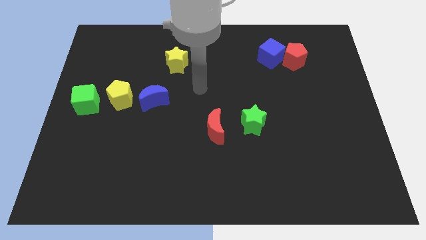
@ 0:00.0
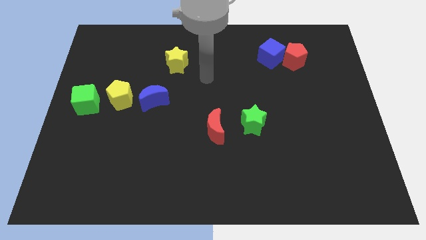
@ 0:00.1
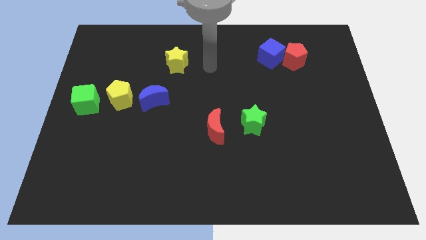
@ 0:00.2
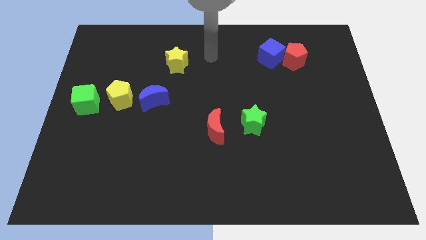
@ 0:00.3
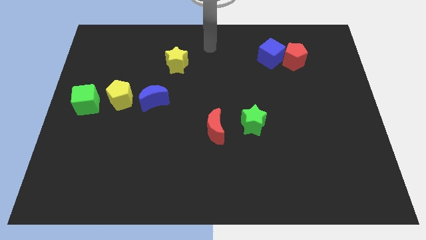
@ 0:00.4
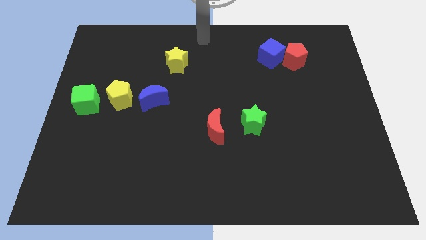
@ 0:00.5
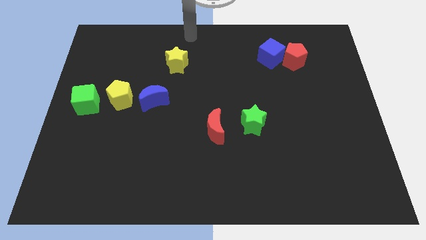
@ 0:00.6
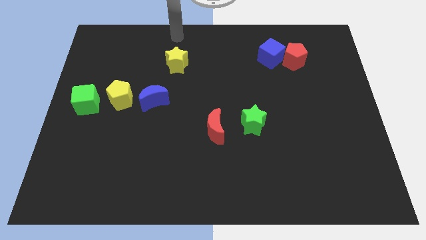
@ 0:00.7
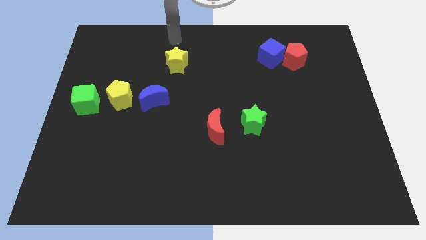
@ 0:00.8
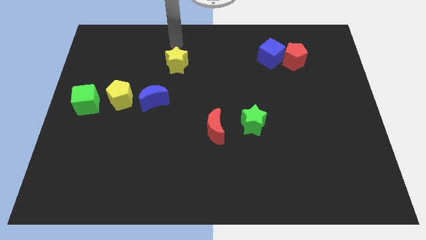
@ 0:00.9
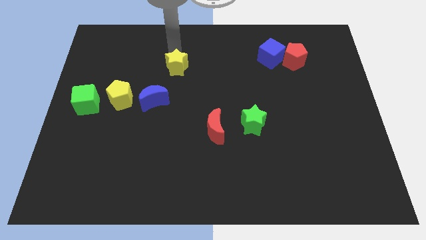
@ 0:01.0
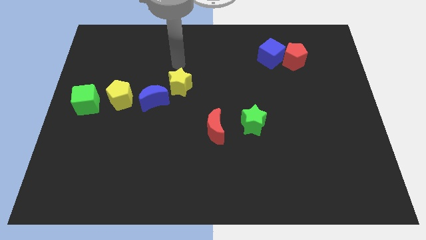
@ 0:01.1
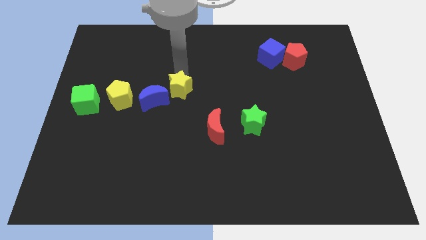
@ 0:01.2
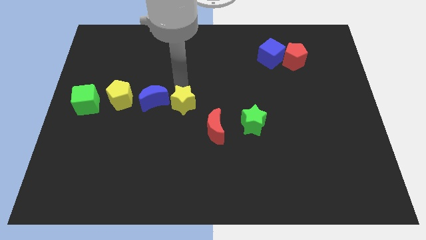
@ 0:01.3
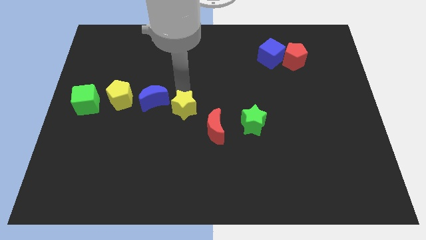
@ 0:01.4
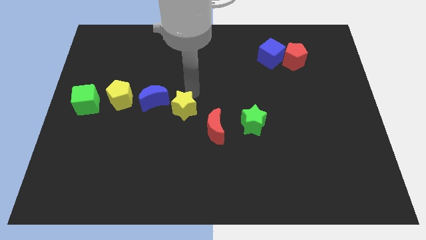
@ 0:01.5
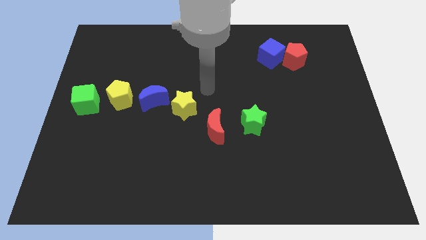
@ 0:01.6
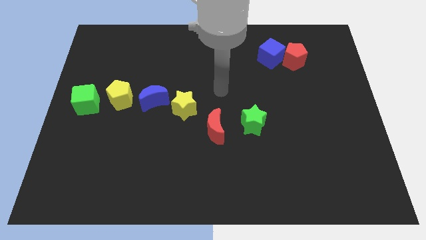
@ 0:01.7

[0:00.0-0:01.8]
place the yellow star in between the red and blue moons

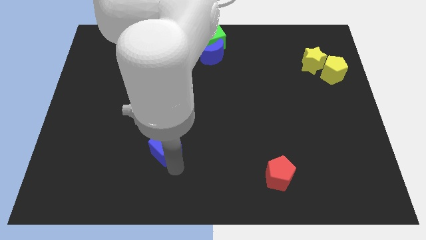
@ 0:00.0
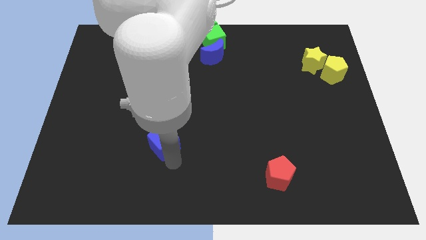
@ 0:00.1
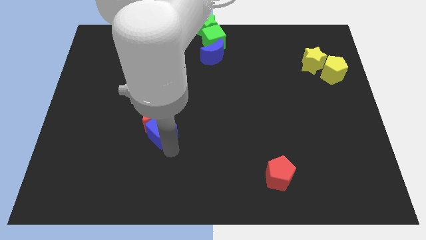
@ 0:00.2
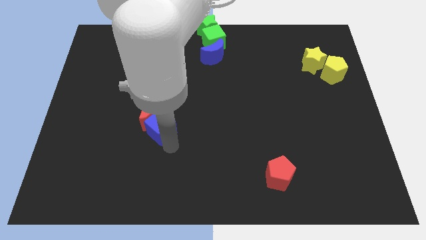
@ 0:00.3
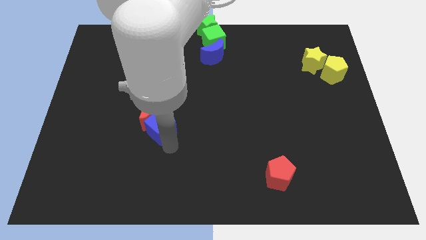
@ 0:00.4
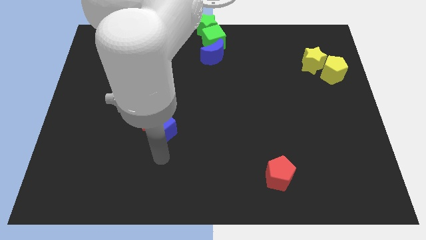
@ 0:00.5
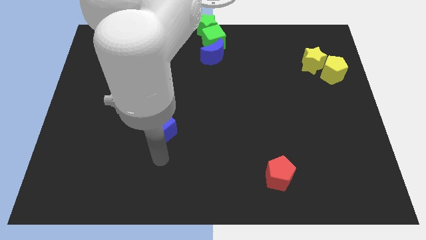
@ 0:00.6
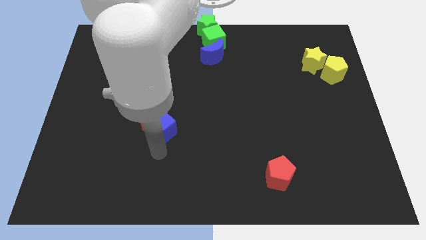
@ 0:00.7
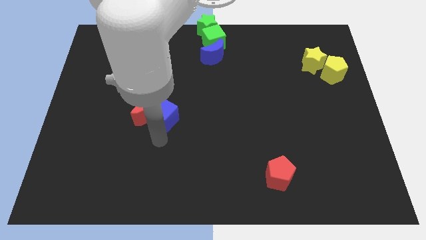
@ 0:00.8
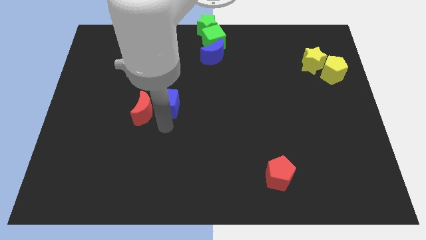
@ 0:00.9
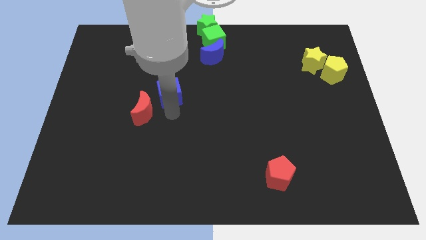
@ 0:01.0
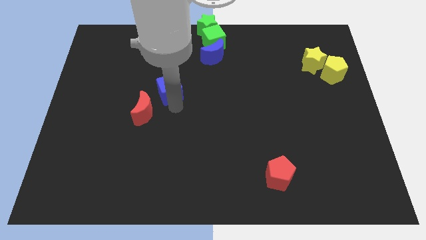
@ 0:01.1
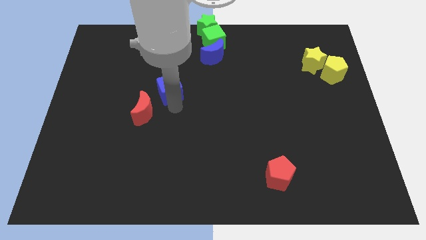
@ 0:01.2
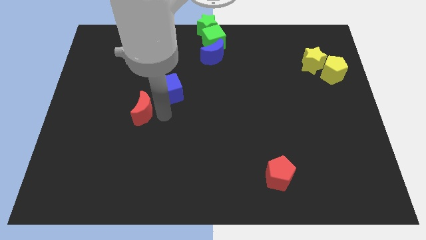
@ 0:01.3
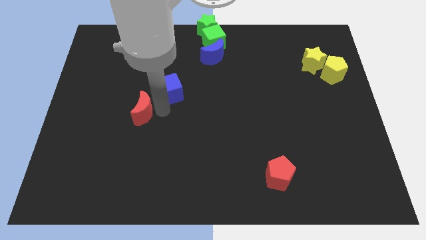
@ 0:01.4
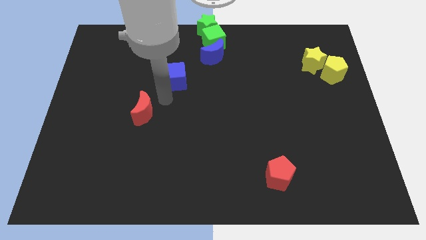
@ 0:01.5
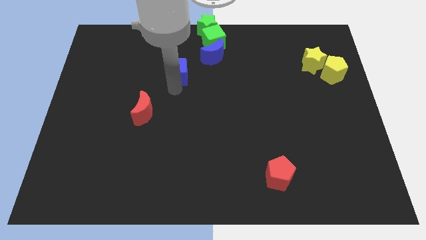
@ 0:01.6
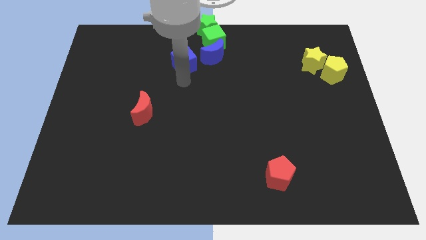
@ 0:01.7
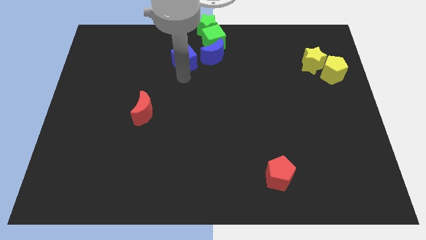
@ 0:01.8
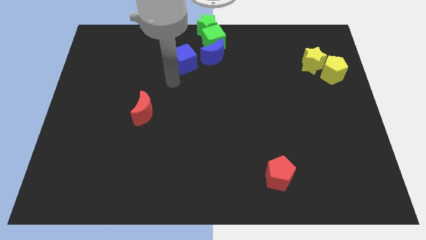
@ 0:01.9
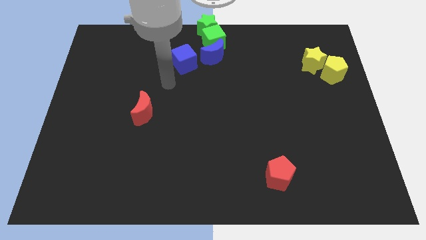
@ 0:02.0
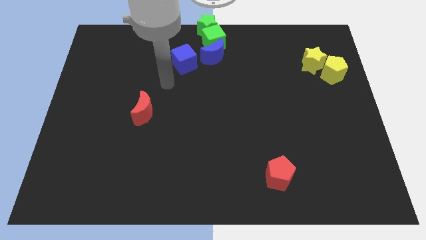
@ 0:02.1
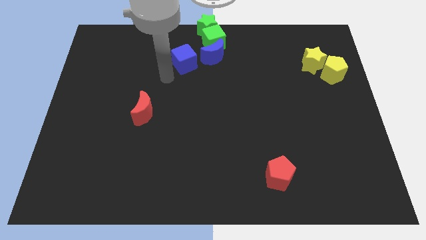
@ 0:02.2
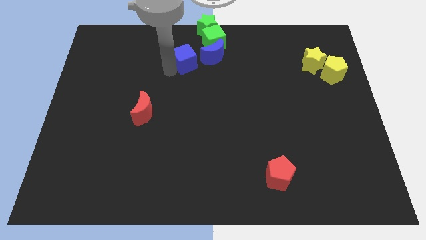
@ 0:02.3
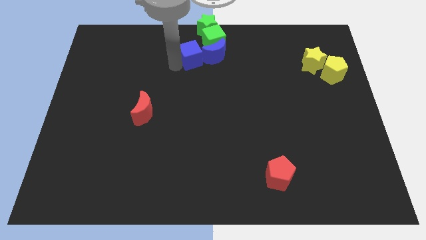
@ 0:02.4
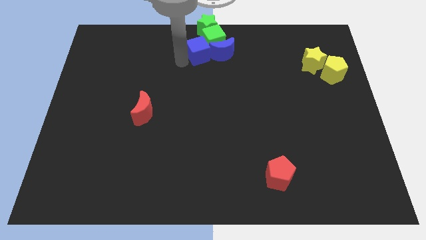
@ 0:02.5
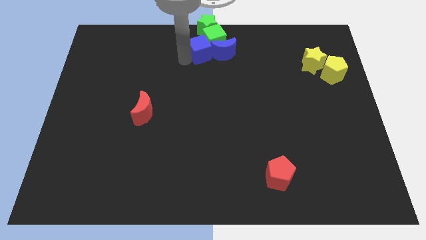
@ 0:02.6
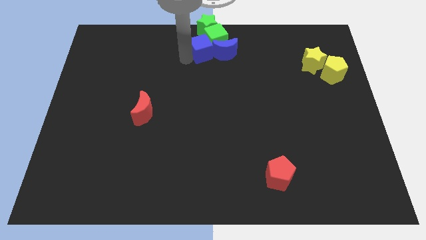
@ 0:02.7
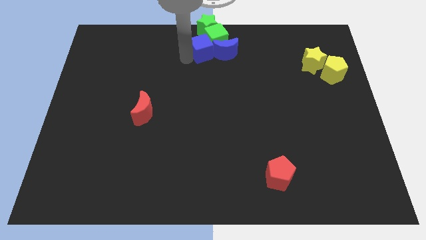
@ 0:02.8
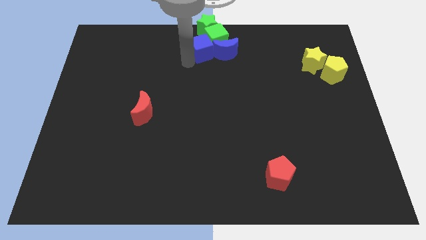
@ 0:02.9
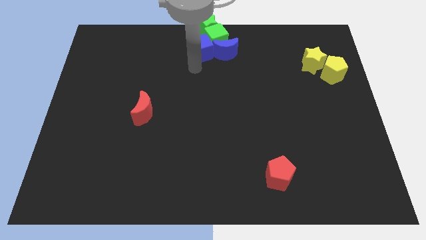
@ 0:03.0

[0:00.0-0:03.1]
move the blue cube to the left side of the blue crescent

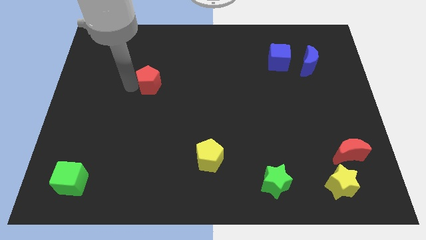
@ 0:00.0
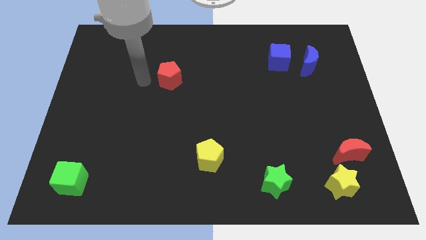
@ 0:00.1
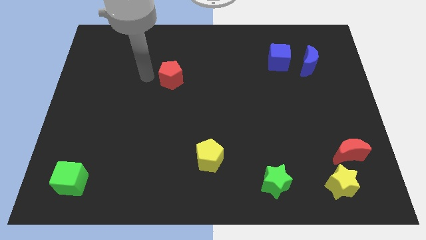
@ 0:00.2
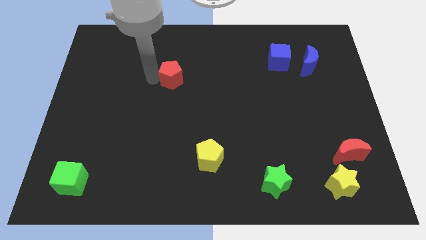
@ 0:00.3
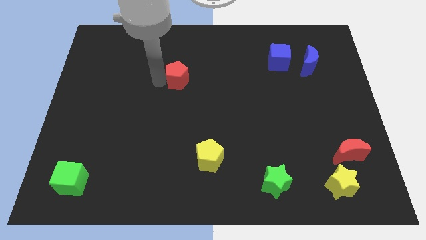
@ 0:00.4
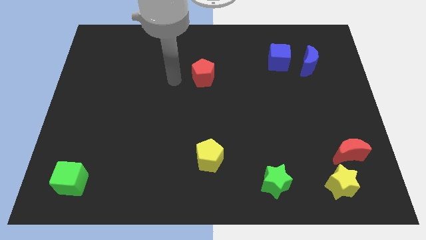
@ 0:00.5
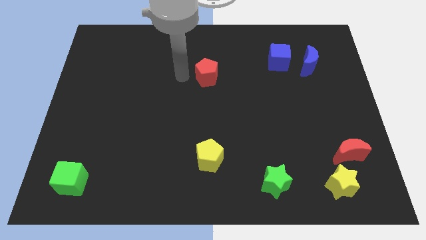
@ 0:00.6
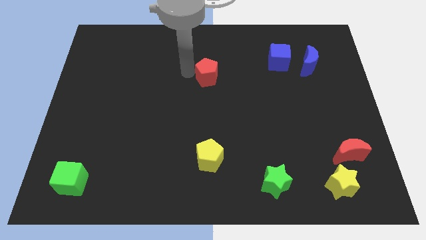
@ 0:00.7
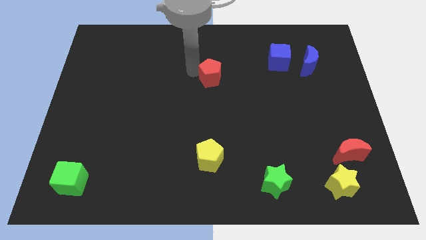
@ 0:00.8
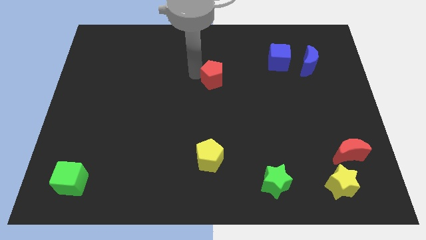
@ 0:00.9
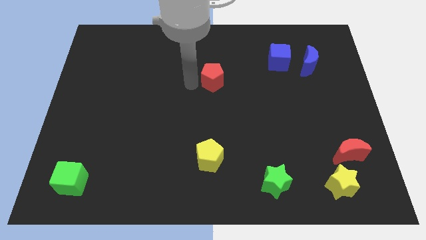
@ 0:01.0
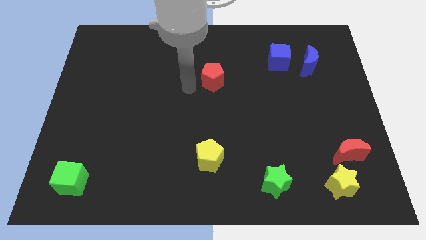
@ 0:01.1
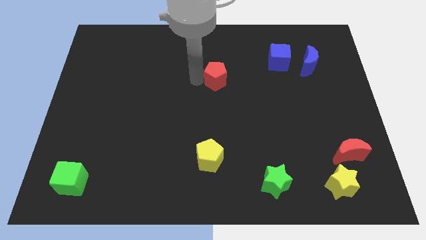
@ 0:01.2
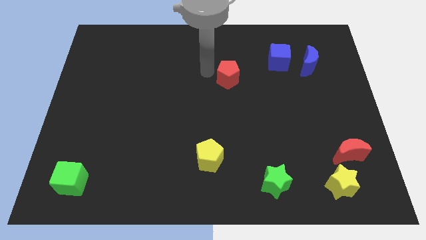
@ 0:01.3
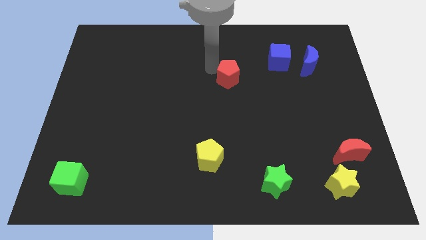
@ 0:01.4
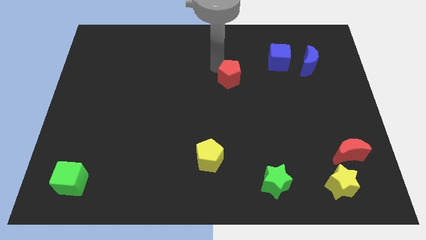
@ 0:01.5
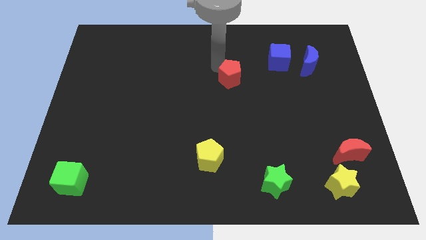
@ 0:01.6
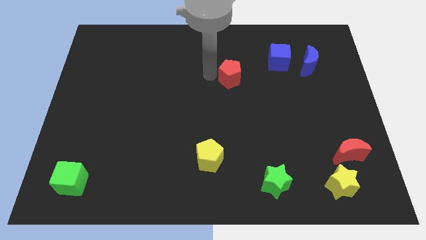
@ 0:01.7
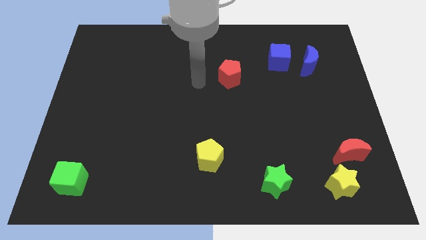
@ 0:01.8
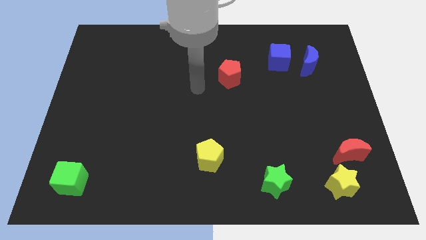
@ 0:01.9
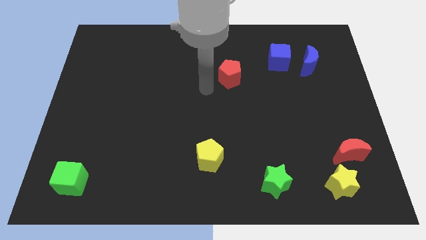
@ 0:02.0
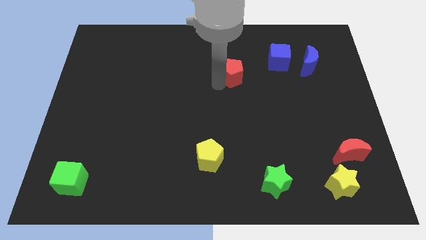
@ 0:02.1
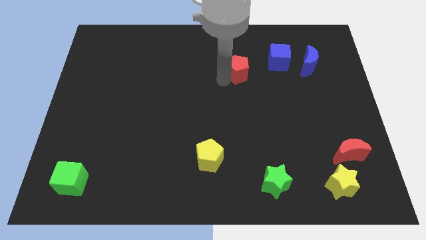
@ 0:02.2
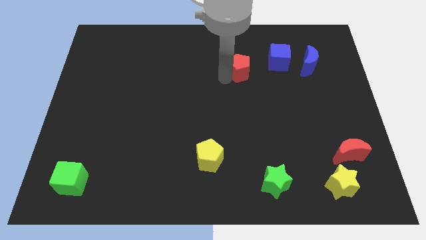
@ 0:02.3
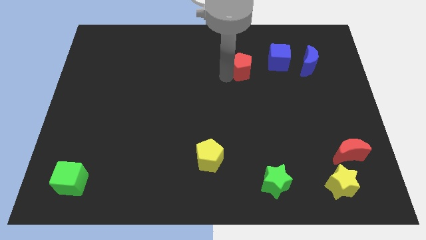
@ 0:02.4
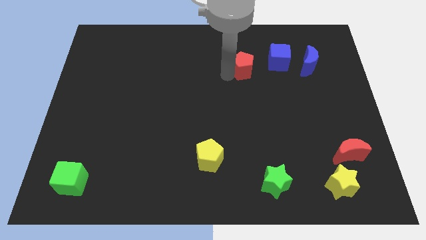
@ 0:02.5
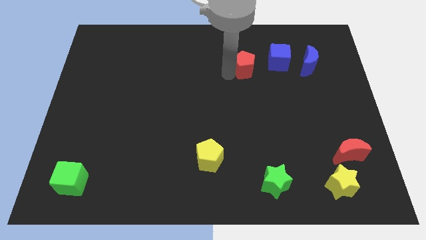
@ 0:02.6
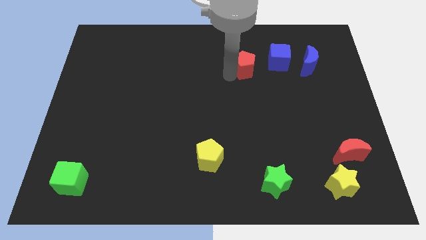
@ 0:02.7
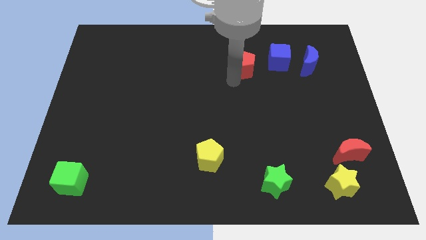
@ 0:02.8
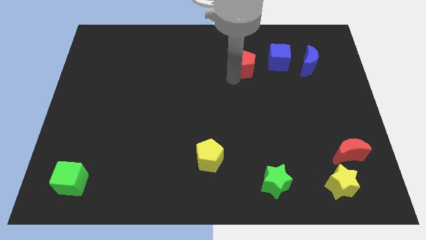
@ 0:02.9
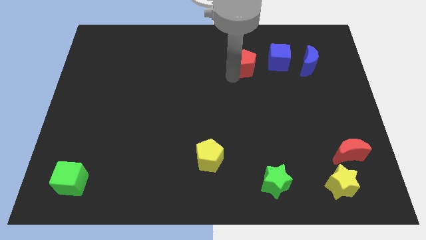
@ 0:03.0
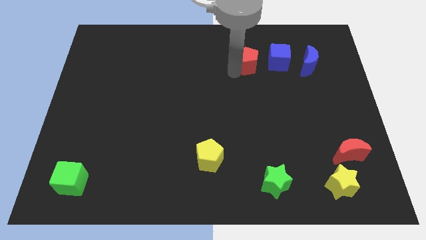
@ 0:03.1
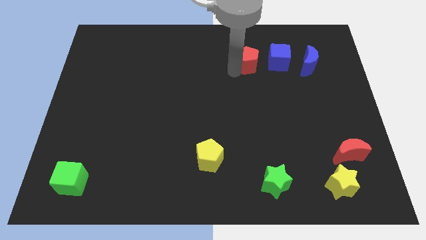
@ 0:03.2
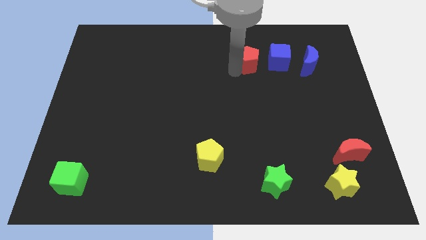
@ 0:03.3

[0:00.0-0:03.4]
move the red pentagon to the blue cube

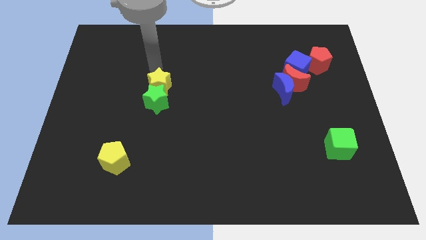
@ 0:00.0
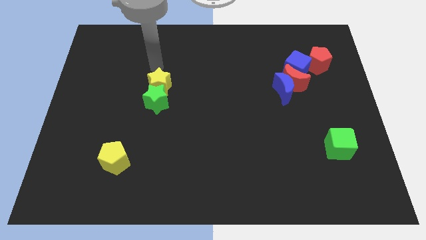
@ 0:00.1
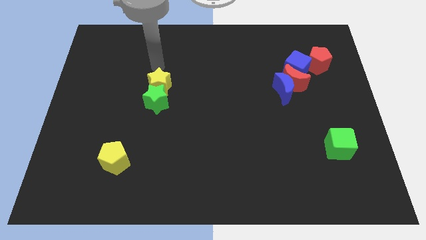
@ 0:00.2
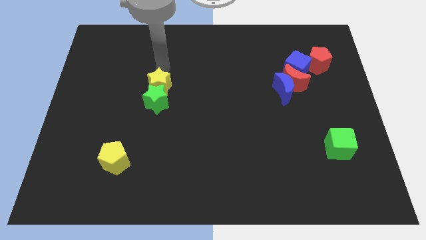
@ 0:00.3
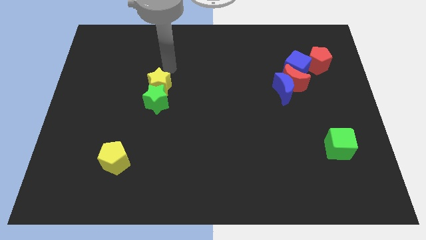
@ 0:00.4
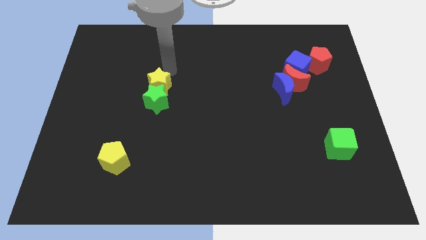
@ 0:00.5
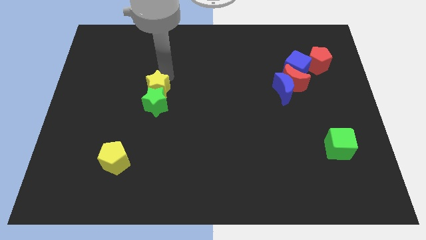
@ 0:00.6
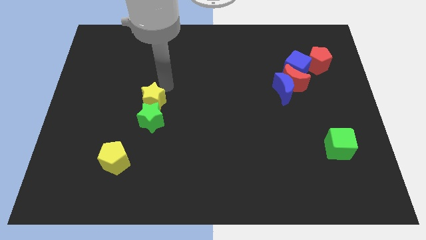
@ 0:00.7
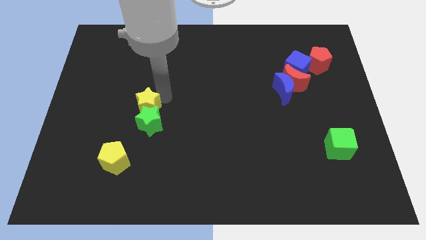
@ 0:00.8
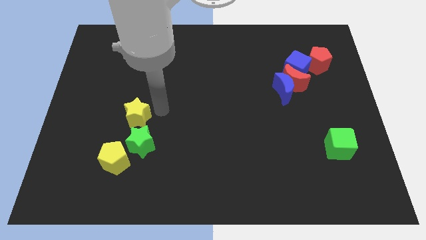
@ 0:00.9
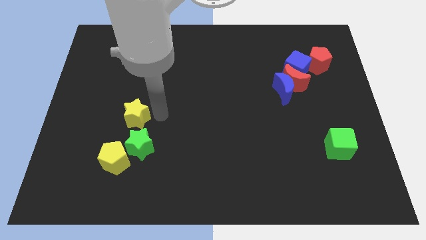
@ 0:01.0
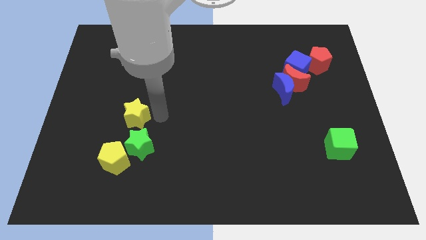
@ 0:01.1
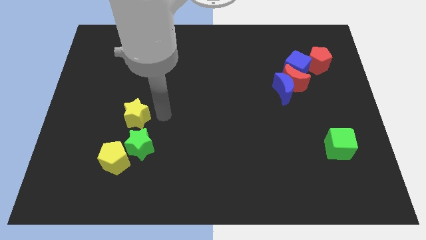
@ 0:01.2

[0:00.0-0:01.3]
slide the yellow star and green star towards the yellow pentagon
